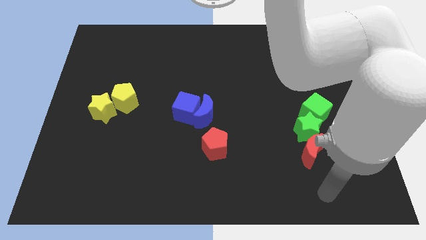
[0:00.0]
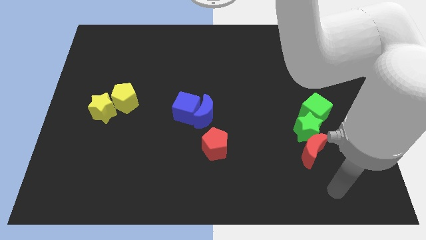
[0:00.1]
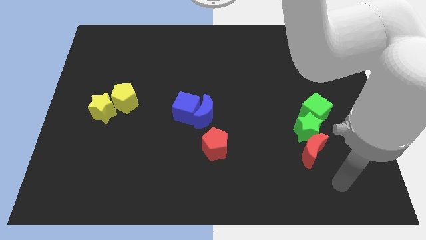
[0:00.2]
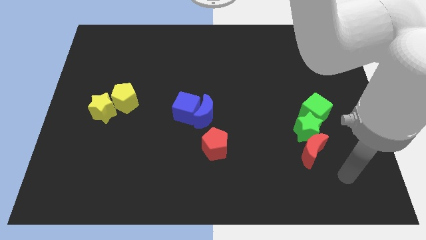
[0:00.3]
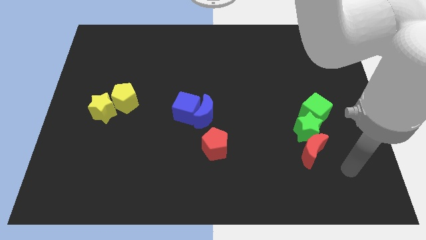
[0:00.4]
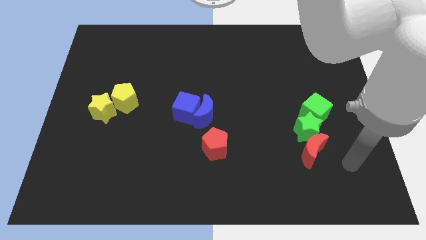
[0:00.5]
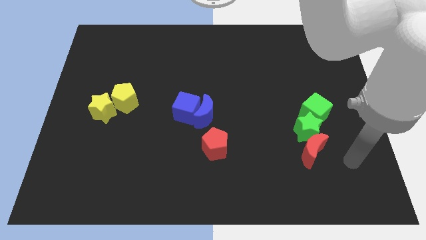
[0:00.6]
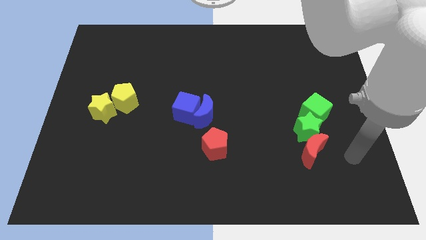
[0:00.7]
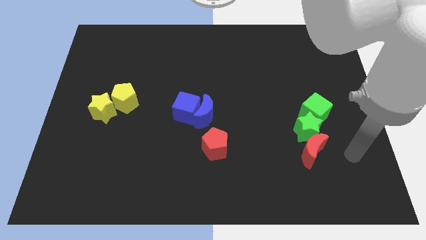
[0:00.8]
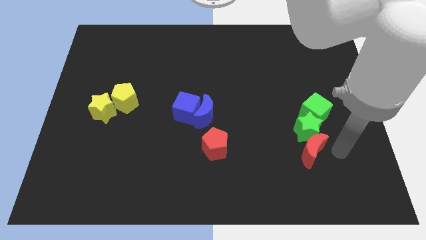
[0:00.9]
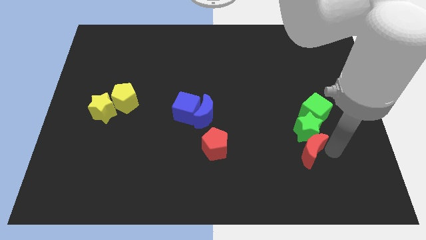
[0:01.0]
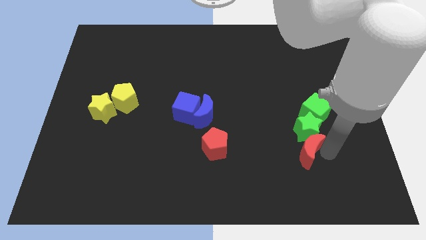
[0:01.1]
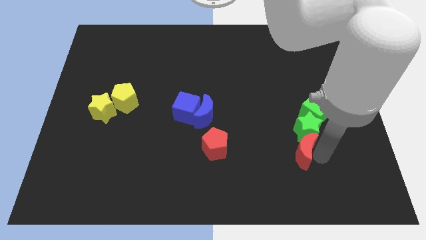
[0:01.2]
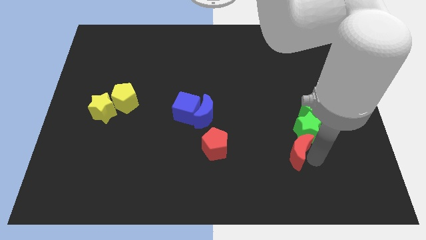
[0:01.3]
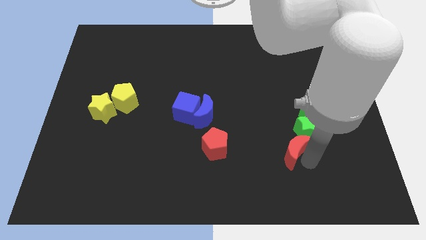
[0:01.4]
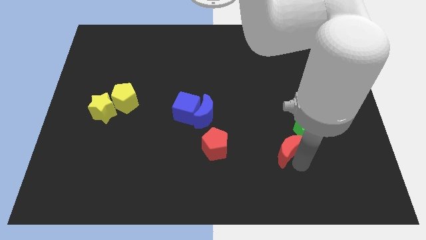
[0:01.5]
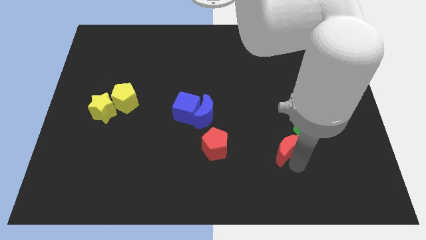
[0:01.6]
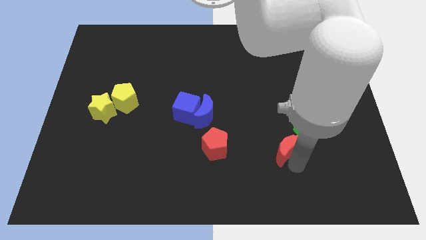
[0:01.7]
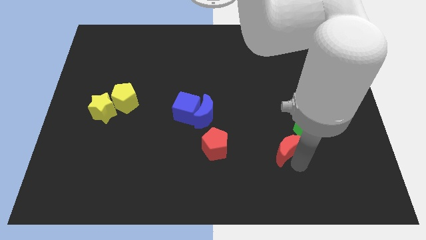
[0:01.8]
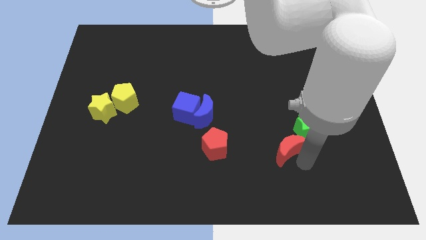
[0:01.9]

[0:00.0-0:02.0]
drag the red crescent to the bottom left side of the green star

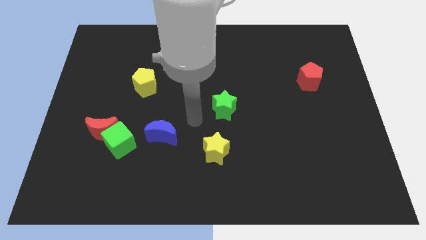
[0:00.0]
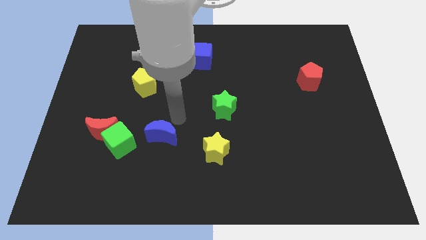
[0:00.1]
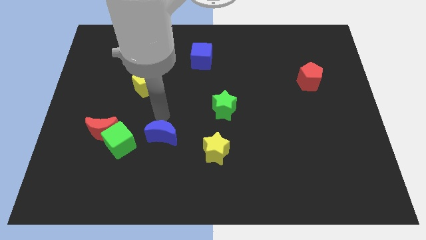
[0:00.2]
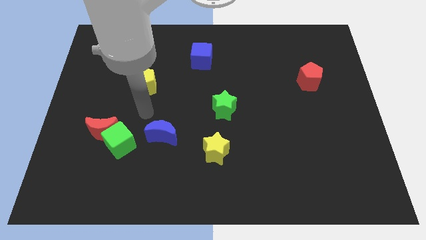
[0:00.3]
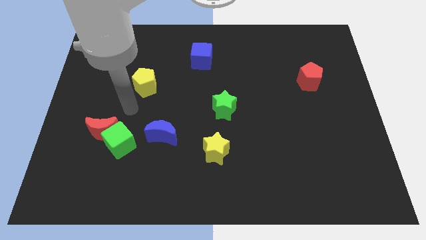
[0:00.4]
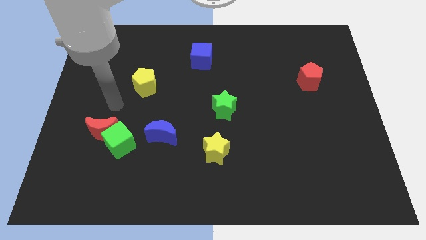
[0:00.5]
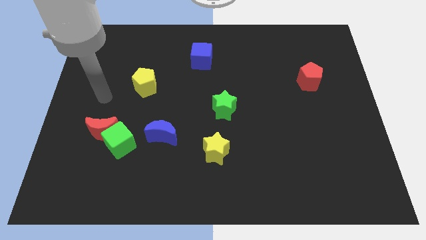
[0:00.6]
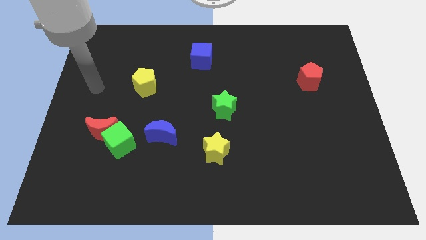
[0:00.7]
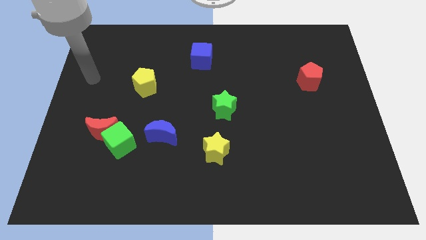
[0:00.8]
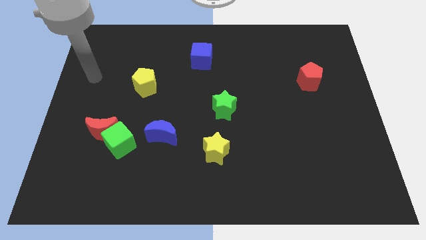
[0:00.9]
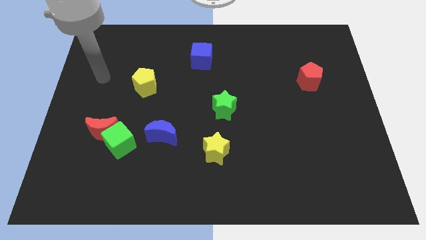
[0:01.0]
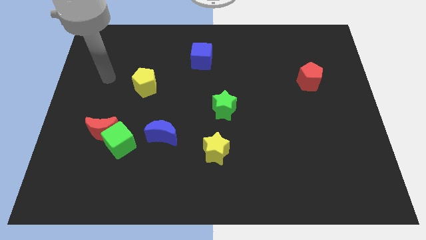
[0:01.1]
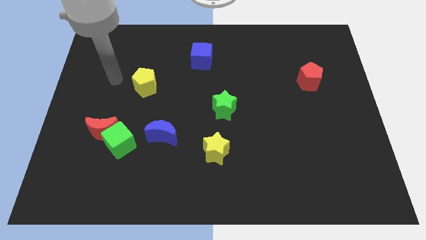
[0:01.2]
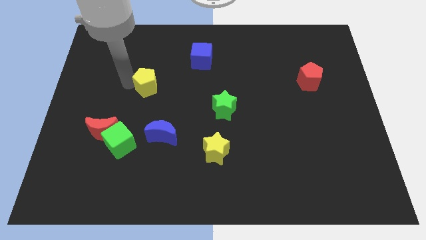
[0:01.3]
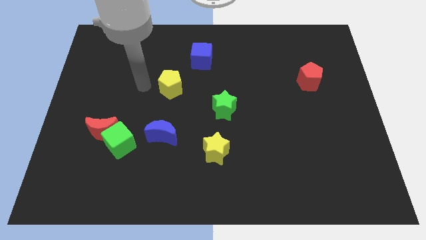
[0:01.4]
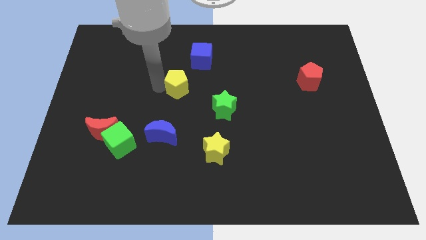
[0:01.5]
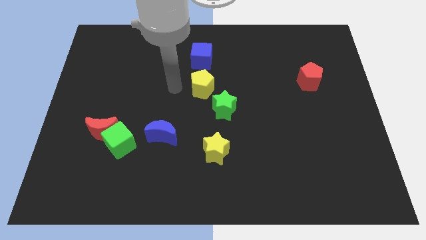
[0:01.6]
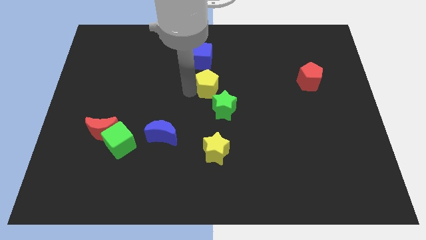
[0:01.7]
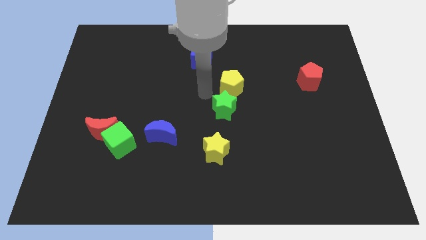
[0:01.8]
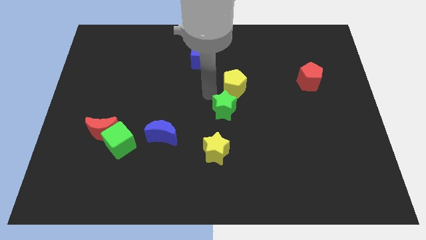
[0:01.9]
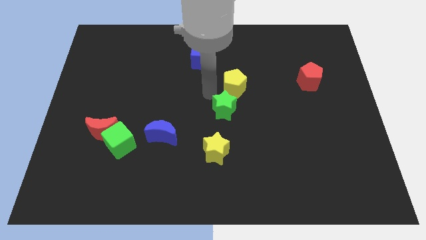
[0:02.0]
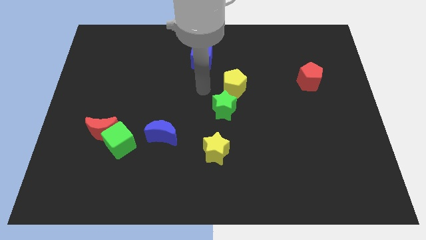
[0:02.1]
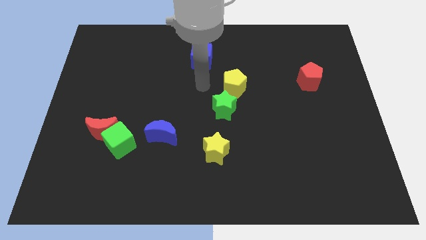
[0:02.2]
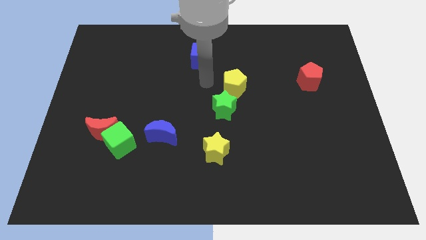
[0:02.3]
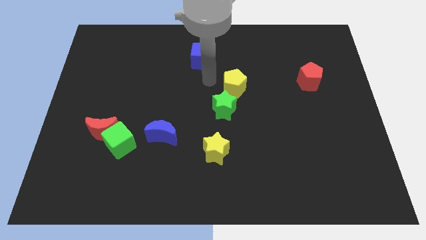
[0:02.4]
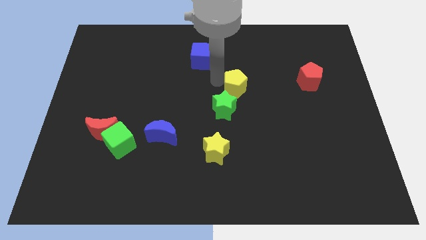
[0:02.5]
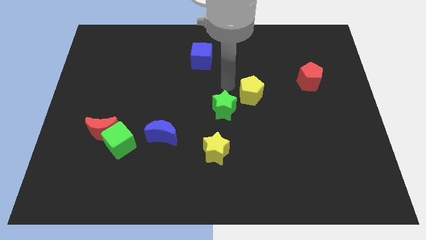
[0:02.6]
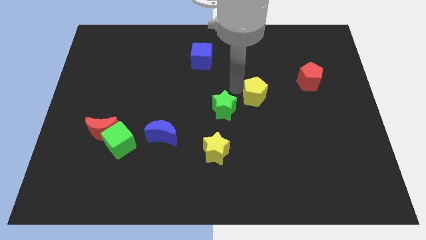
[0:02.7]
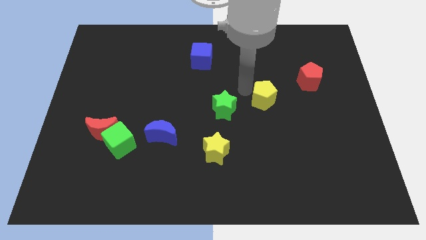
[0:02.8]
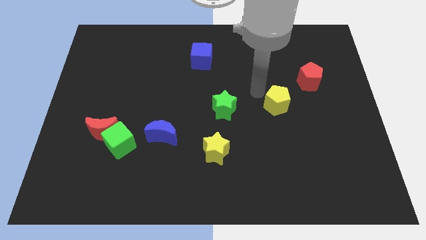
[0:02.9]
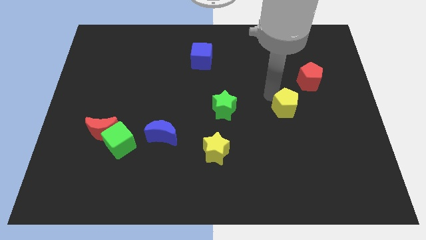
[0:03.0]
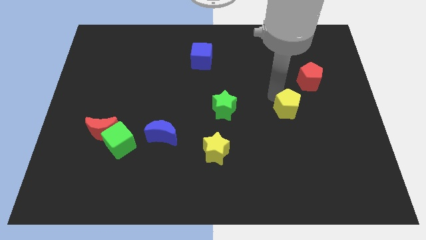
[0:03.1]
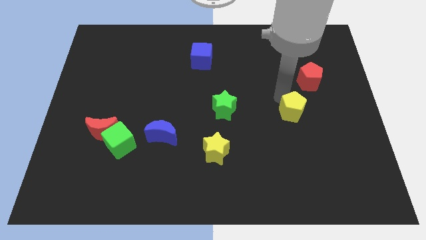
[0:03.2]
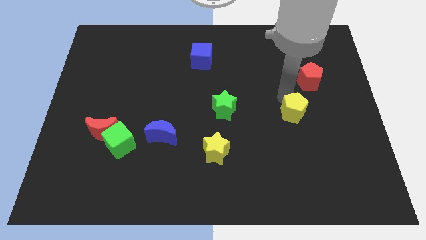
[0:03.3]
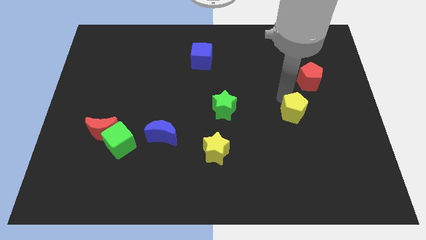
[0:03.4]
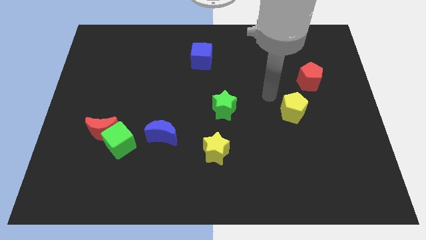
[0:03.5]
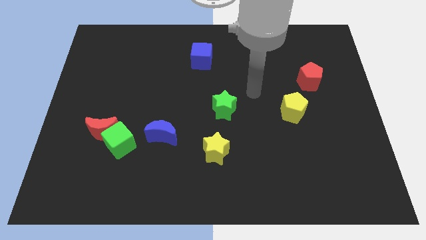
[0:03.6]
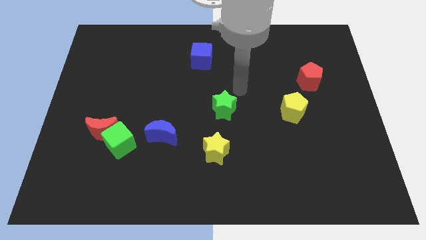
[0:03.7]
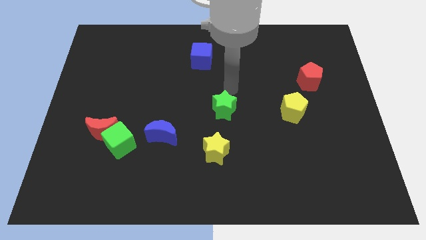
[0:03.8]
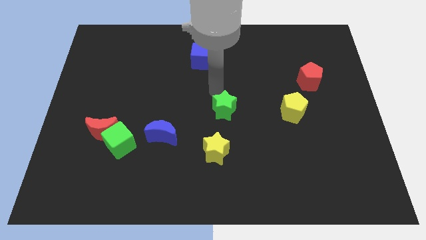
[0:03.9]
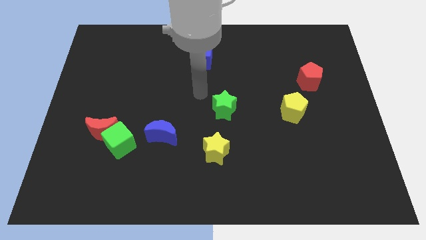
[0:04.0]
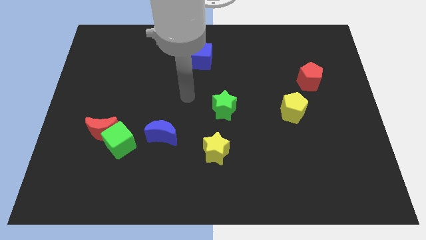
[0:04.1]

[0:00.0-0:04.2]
place the yellow pentagon to the right of the green star

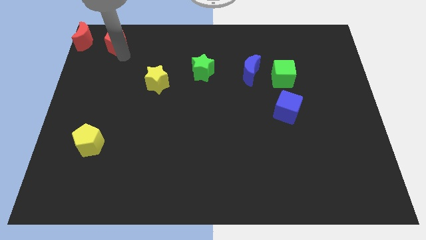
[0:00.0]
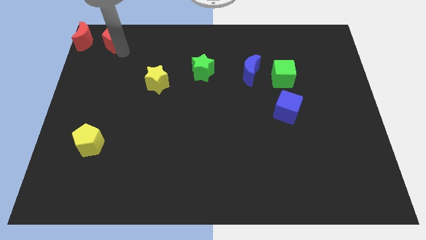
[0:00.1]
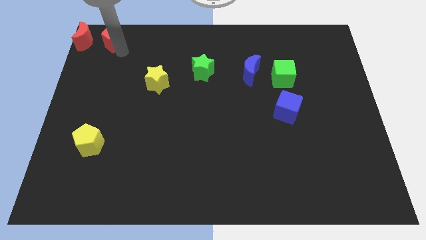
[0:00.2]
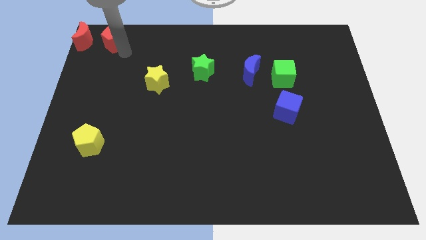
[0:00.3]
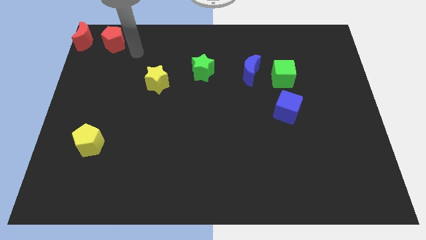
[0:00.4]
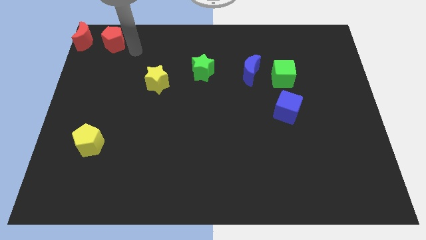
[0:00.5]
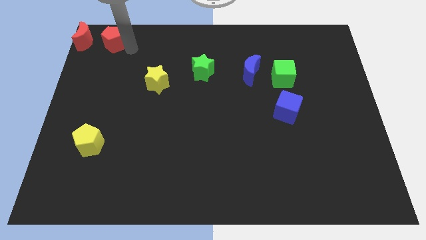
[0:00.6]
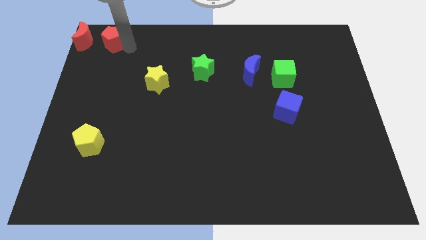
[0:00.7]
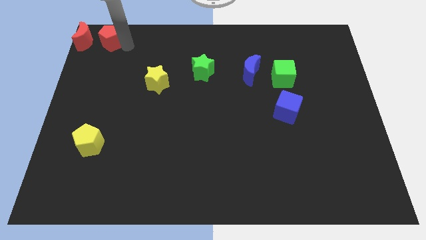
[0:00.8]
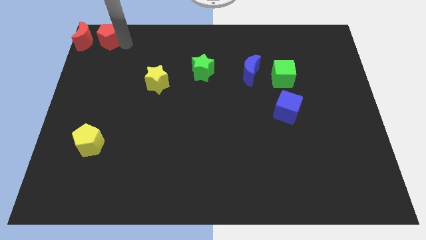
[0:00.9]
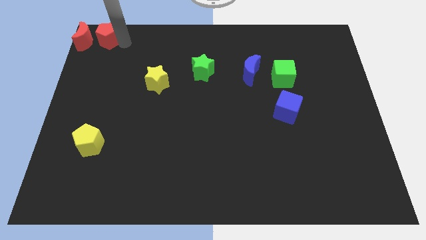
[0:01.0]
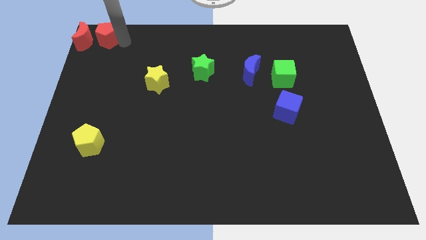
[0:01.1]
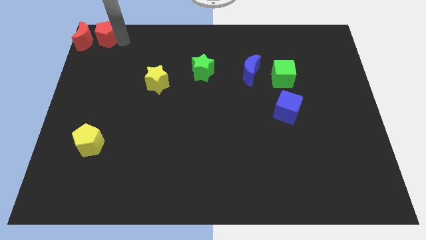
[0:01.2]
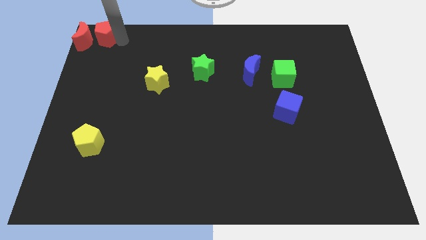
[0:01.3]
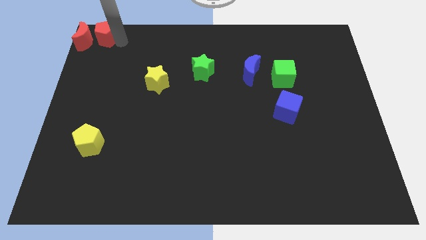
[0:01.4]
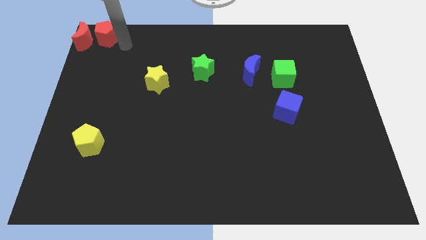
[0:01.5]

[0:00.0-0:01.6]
push the red pentagon near to the red crescent

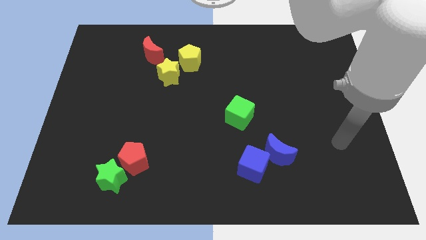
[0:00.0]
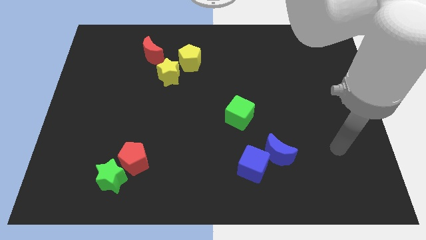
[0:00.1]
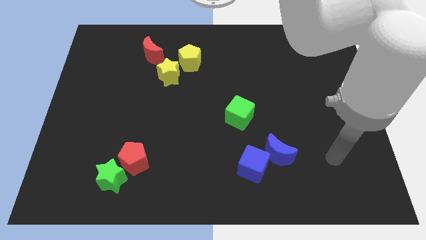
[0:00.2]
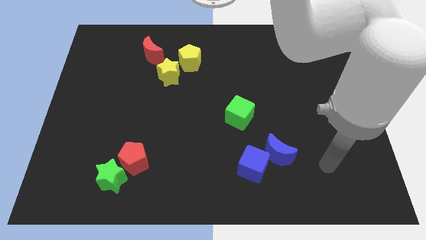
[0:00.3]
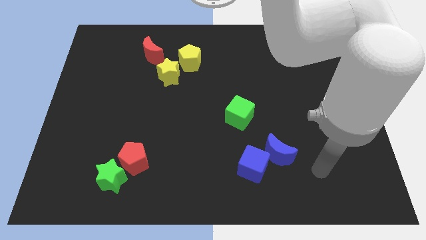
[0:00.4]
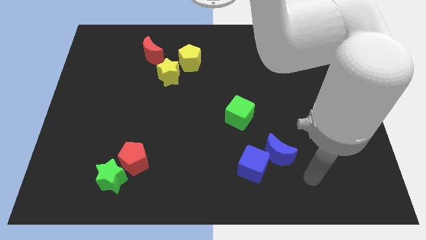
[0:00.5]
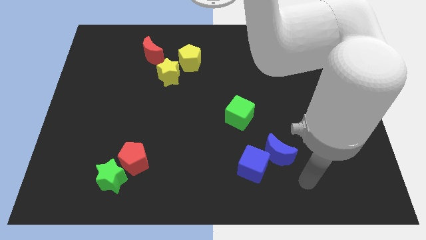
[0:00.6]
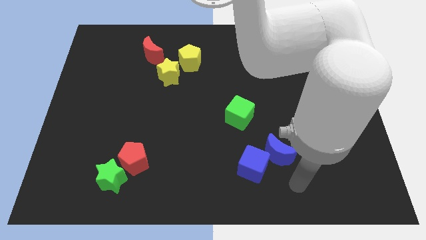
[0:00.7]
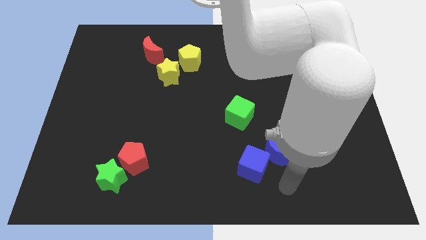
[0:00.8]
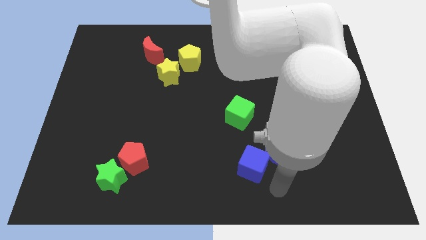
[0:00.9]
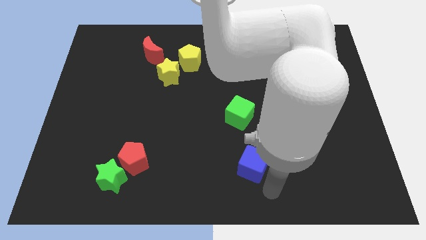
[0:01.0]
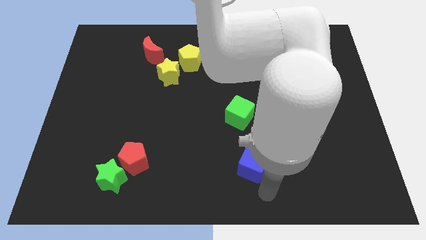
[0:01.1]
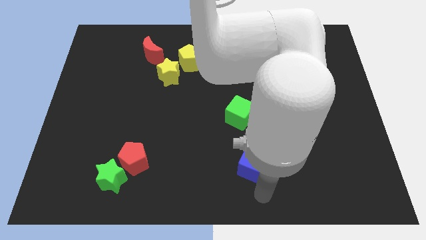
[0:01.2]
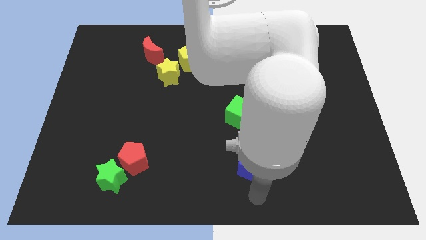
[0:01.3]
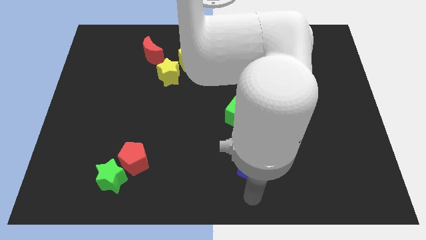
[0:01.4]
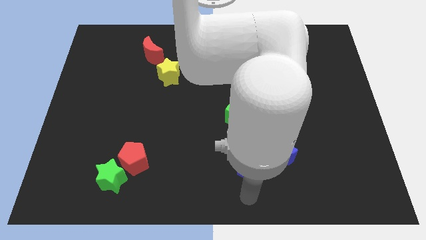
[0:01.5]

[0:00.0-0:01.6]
place the arm below the blue cube
